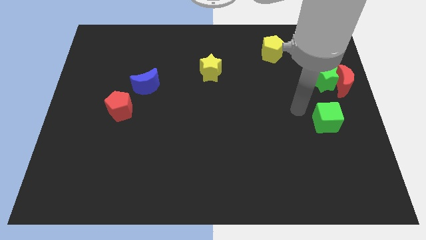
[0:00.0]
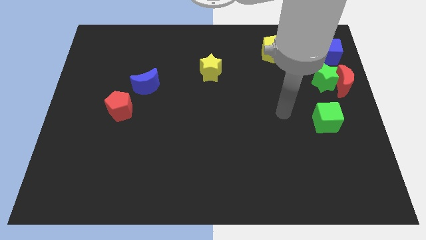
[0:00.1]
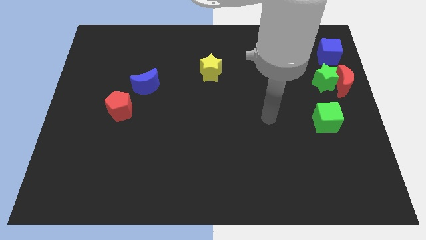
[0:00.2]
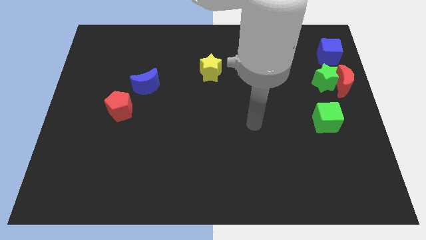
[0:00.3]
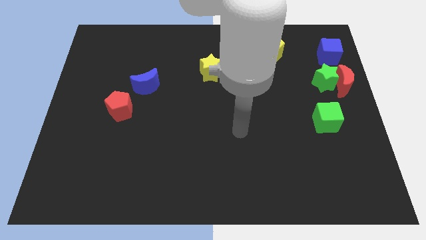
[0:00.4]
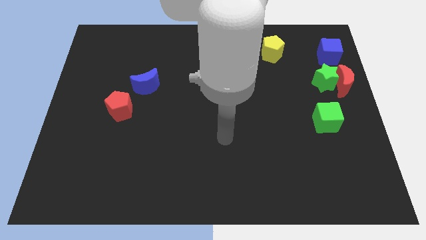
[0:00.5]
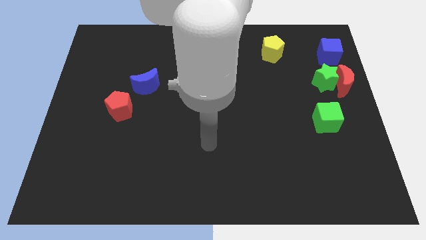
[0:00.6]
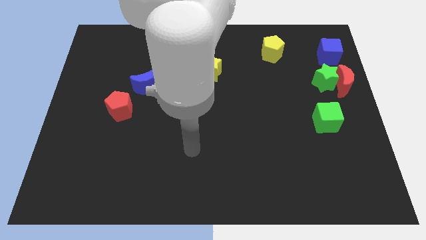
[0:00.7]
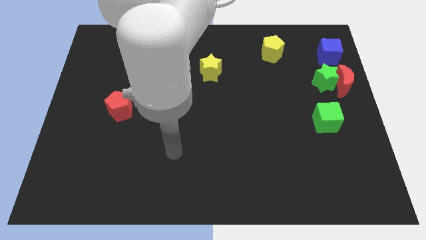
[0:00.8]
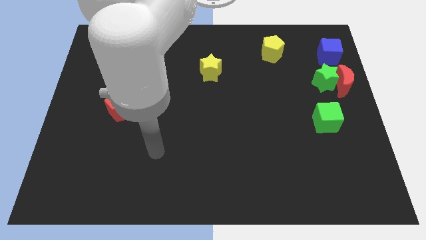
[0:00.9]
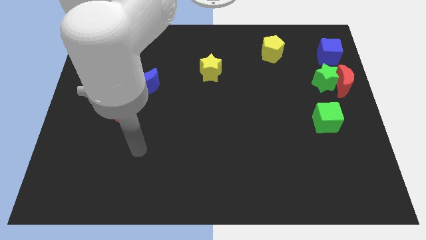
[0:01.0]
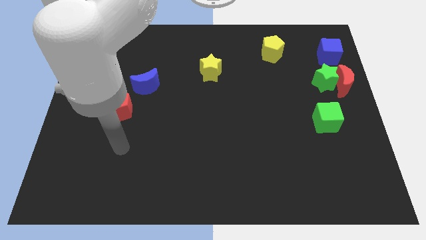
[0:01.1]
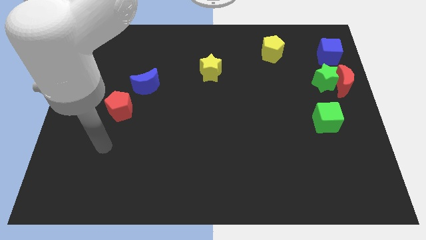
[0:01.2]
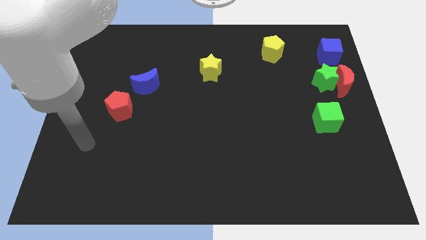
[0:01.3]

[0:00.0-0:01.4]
move the pointer away from the green cube

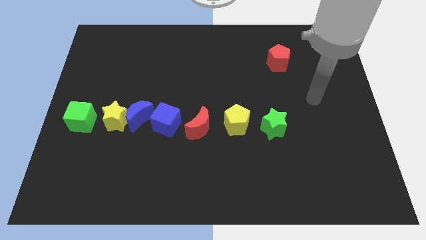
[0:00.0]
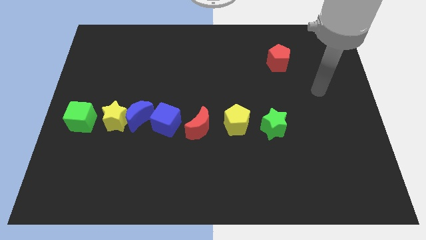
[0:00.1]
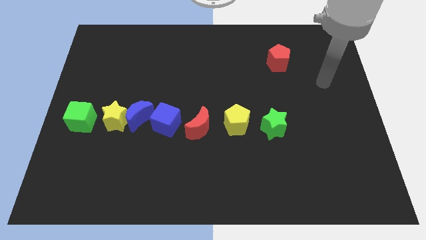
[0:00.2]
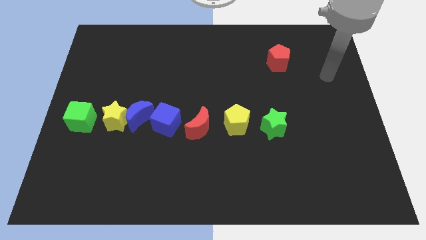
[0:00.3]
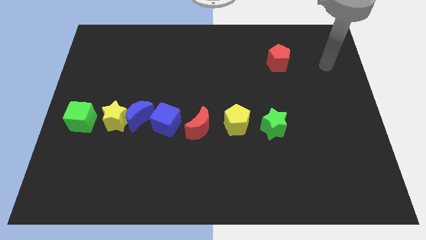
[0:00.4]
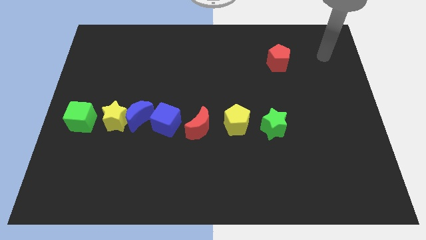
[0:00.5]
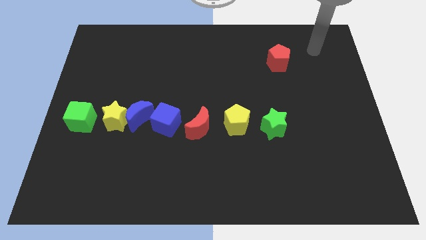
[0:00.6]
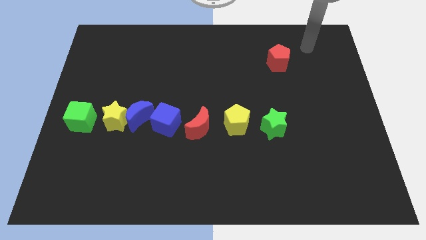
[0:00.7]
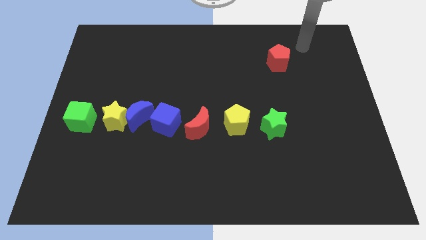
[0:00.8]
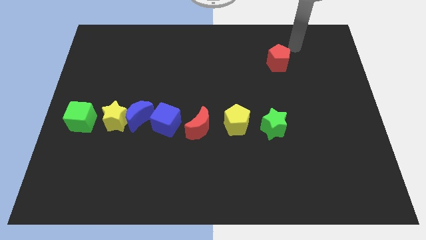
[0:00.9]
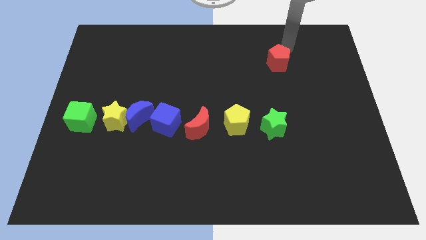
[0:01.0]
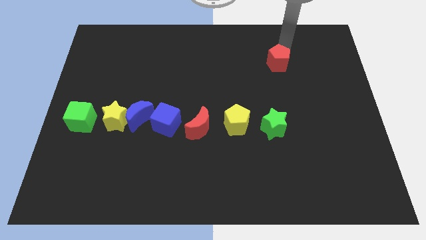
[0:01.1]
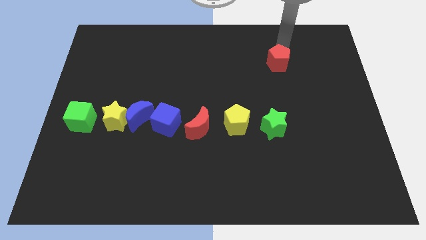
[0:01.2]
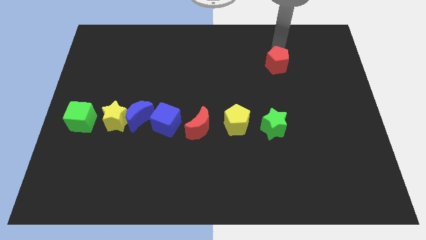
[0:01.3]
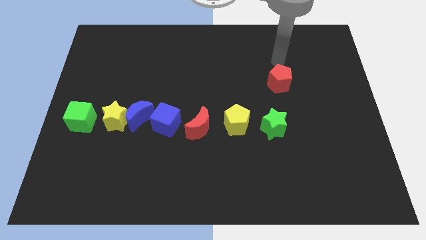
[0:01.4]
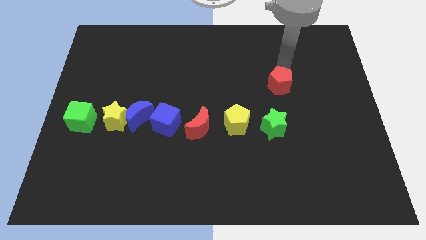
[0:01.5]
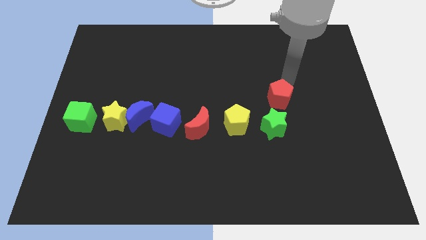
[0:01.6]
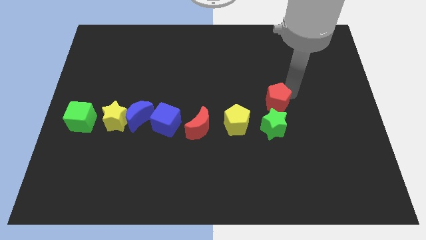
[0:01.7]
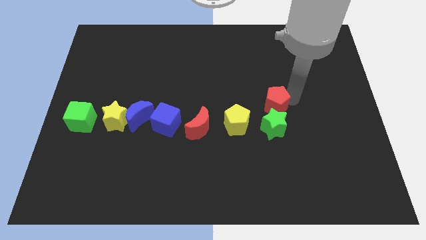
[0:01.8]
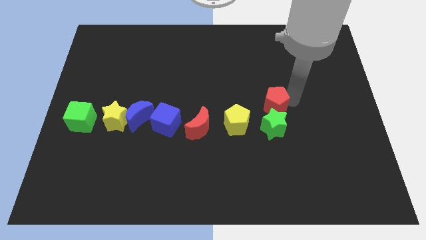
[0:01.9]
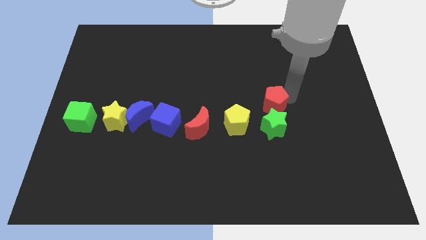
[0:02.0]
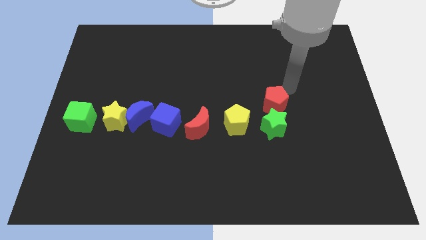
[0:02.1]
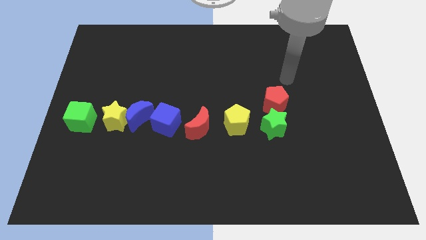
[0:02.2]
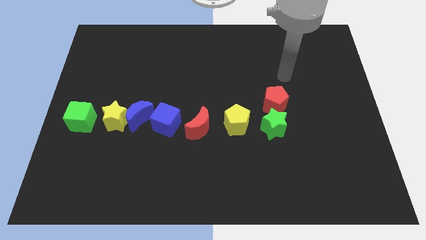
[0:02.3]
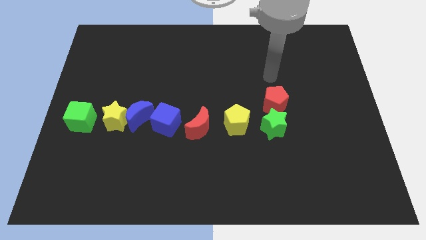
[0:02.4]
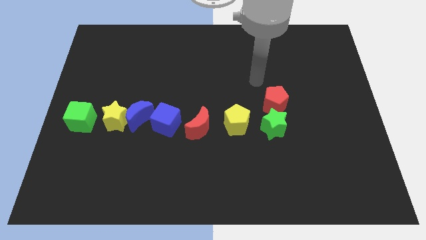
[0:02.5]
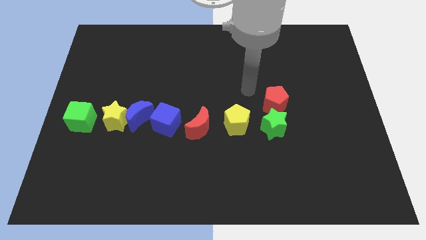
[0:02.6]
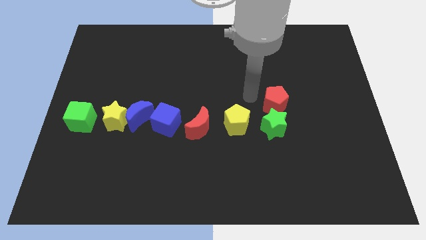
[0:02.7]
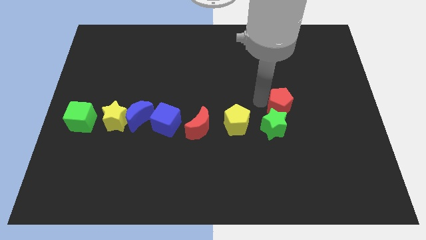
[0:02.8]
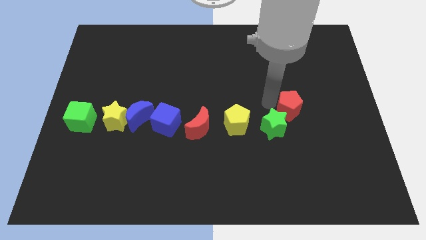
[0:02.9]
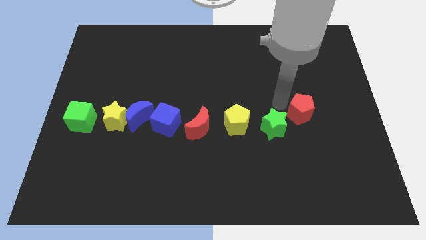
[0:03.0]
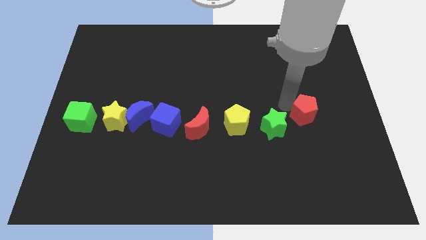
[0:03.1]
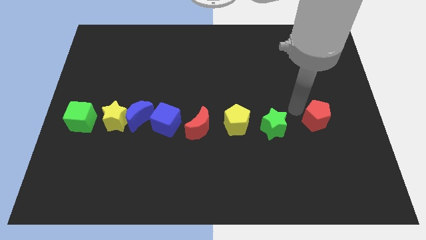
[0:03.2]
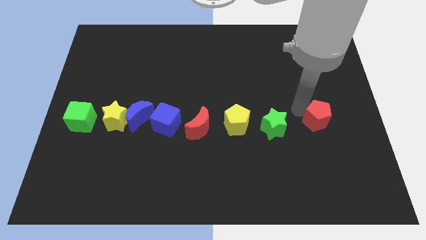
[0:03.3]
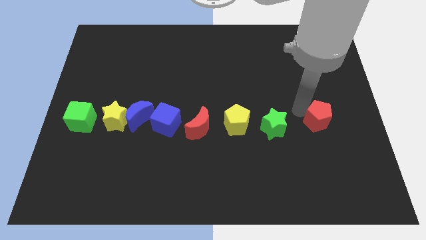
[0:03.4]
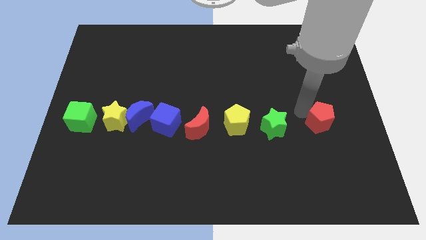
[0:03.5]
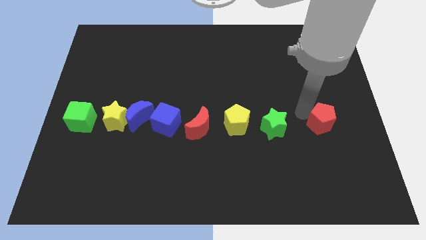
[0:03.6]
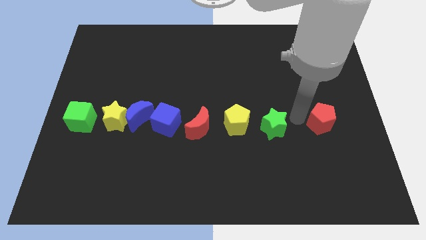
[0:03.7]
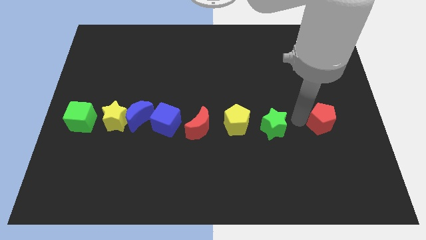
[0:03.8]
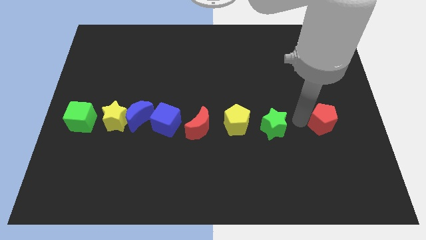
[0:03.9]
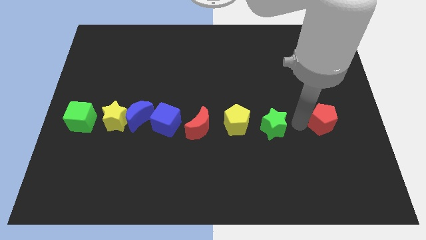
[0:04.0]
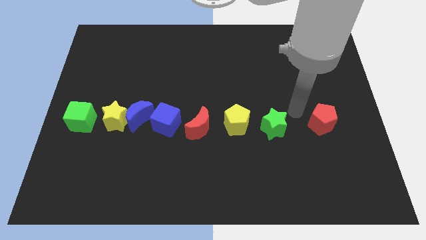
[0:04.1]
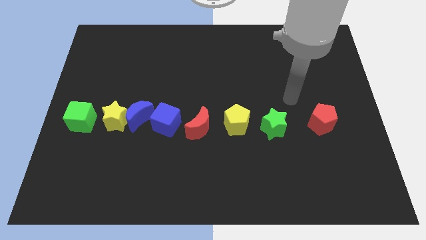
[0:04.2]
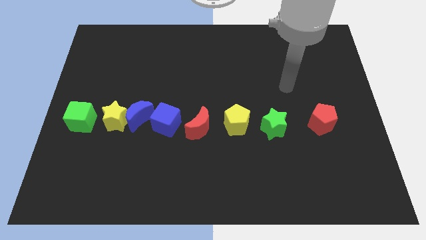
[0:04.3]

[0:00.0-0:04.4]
push the red pentagon to the right side of the board

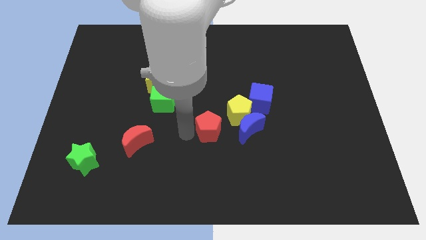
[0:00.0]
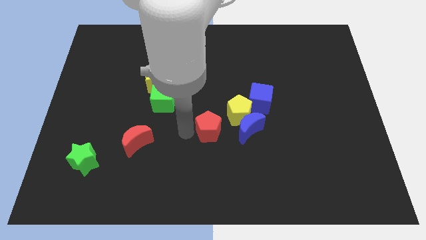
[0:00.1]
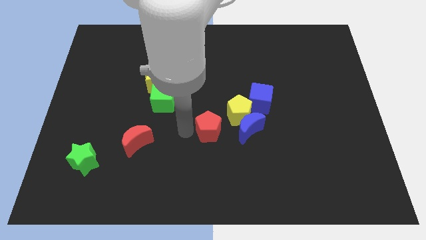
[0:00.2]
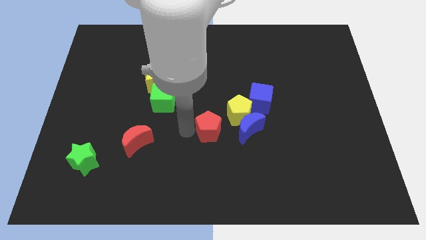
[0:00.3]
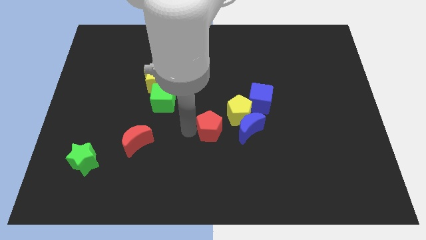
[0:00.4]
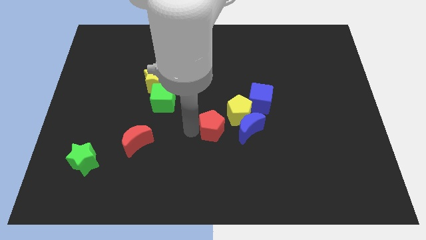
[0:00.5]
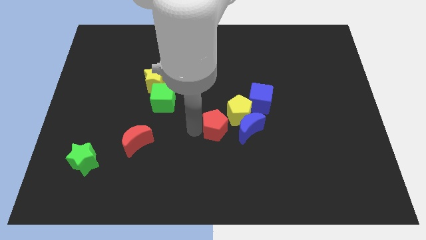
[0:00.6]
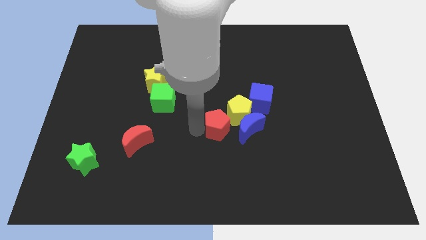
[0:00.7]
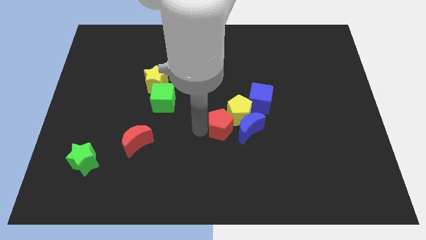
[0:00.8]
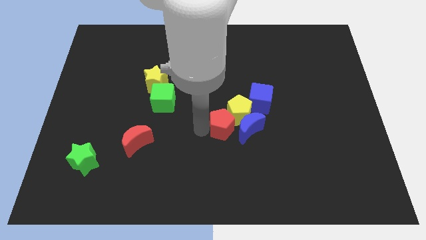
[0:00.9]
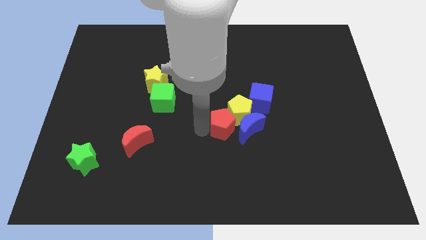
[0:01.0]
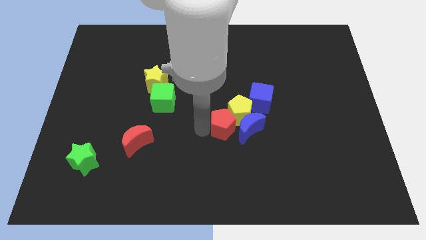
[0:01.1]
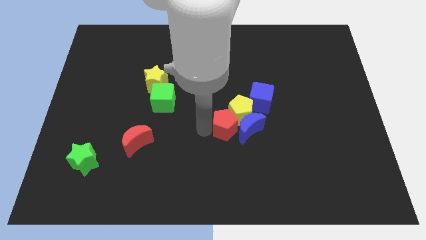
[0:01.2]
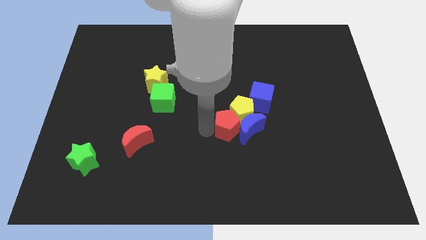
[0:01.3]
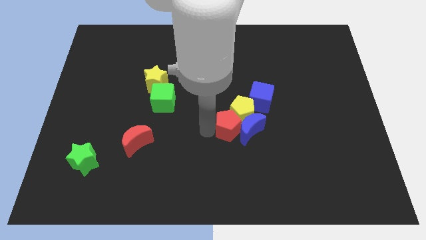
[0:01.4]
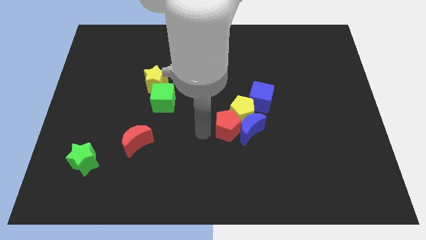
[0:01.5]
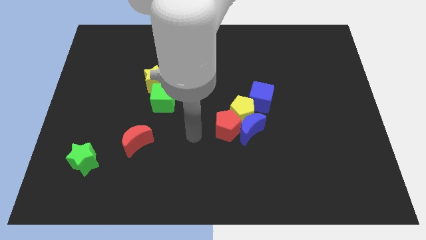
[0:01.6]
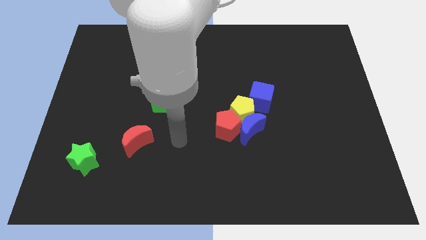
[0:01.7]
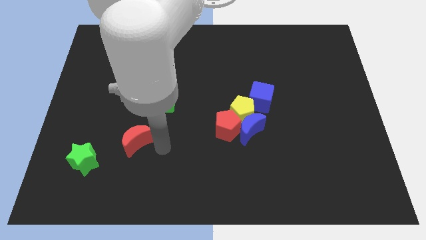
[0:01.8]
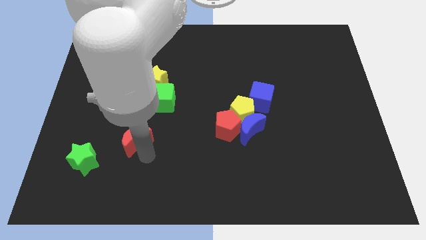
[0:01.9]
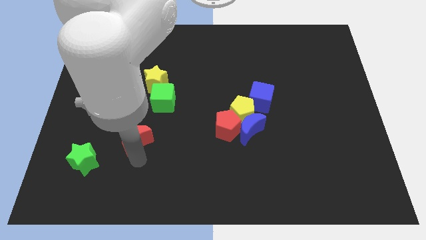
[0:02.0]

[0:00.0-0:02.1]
move the red pentagon into the yellow pentagon

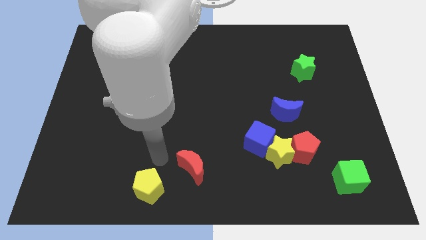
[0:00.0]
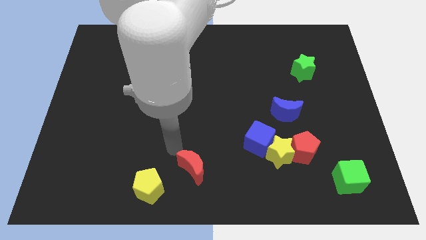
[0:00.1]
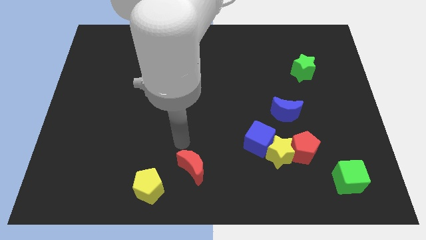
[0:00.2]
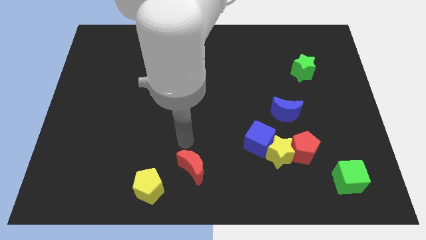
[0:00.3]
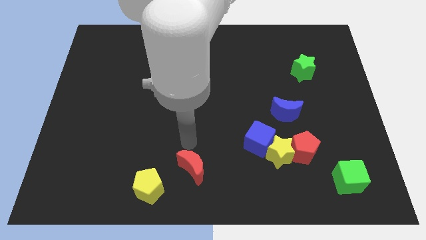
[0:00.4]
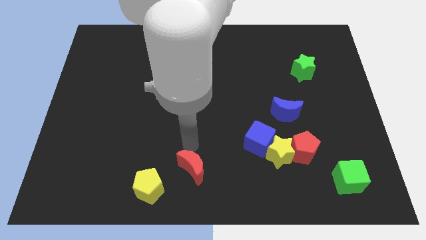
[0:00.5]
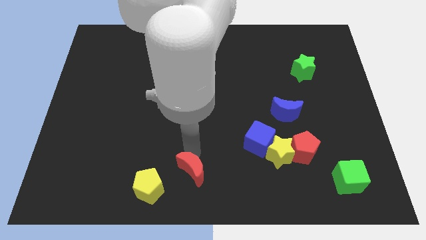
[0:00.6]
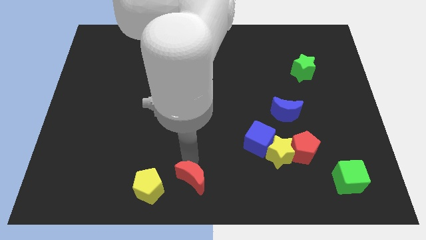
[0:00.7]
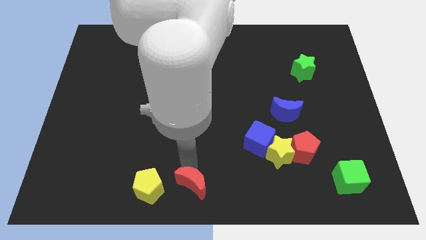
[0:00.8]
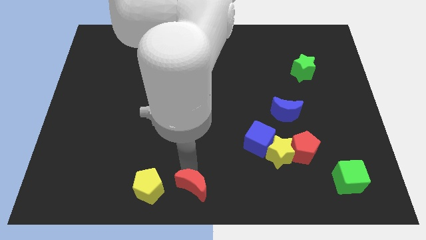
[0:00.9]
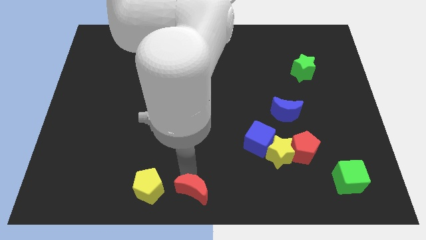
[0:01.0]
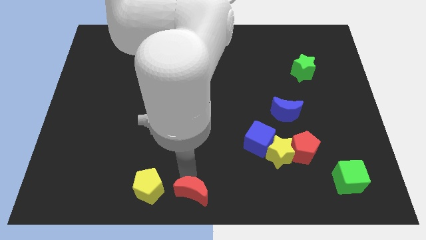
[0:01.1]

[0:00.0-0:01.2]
move the red crescent slightly towards bottom center of the board
